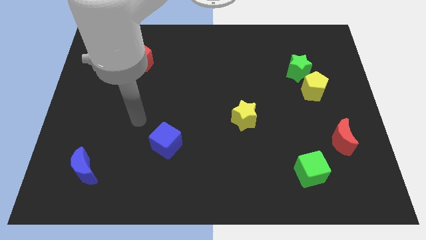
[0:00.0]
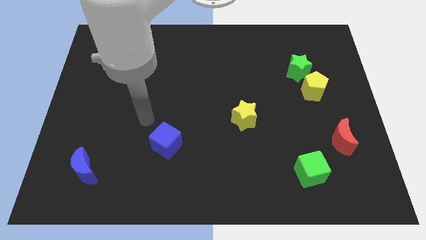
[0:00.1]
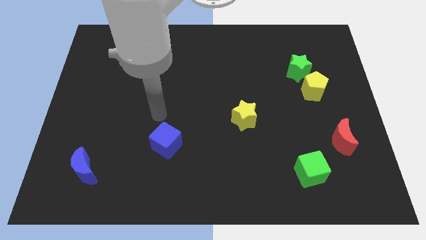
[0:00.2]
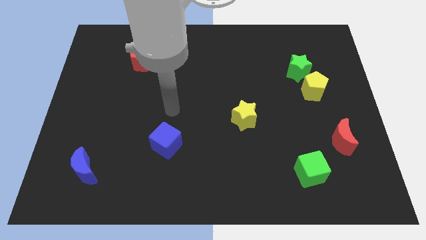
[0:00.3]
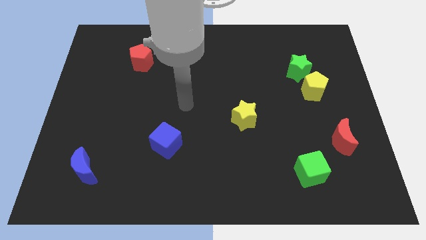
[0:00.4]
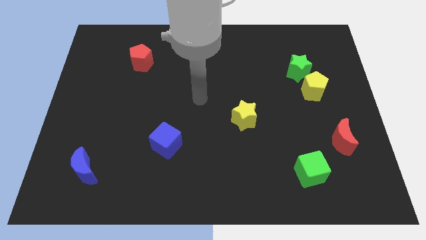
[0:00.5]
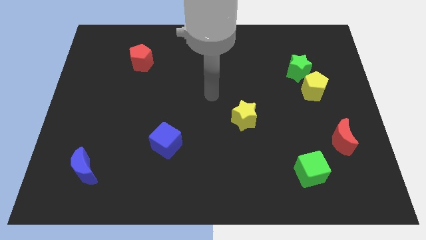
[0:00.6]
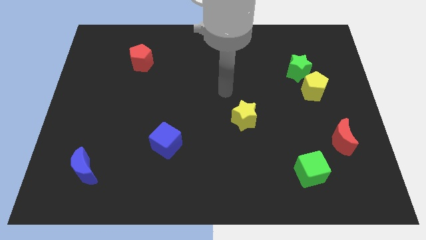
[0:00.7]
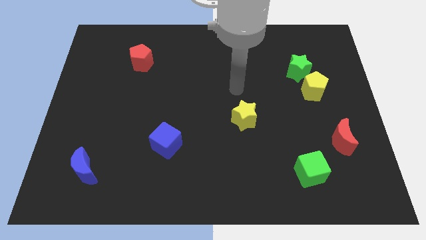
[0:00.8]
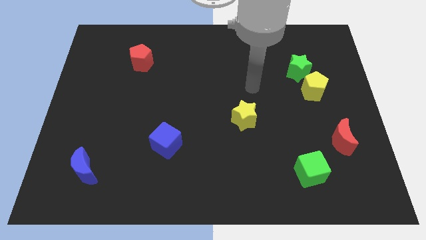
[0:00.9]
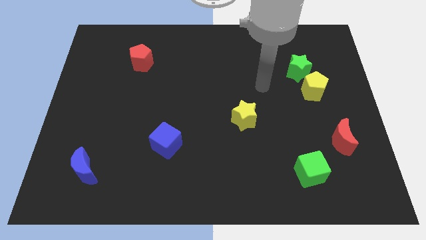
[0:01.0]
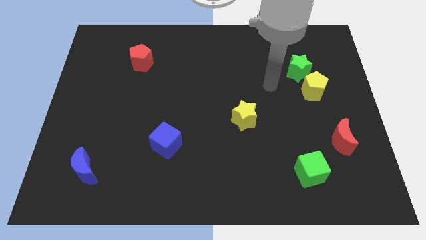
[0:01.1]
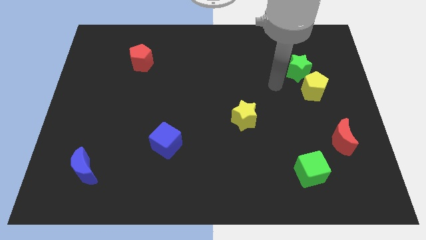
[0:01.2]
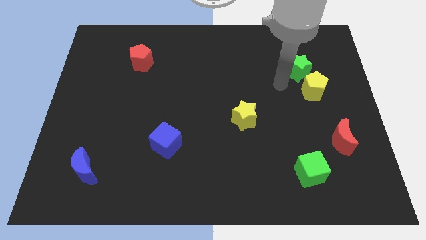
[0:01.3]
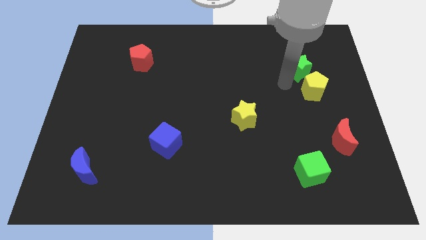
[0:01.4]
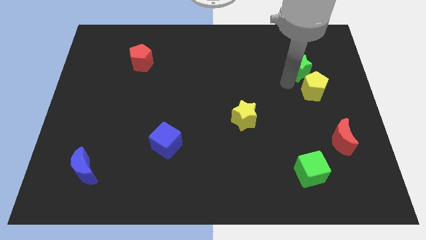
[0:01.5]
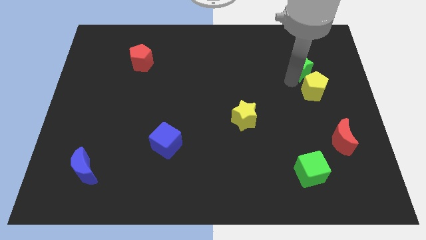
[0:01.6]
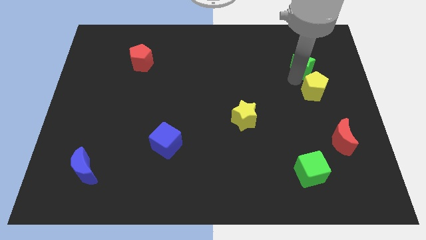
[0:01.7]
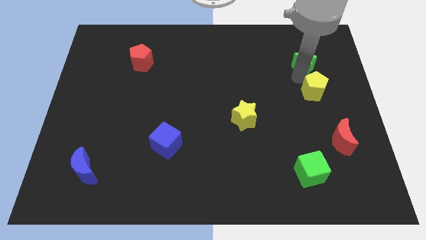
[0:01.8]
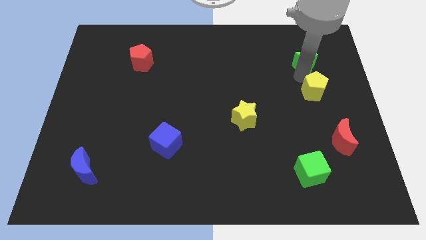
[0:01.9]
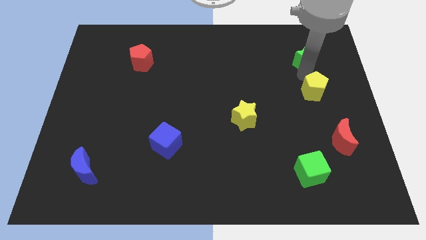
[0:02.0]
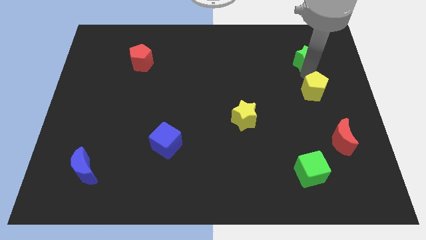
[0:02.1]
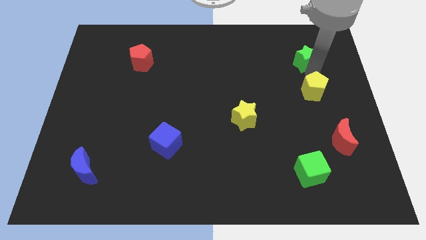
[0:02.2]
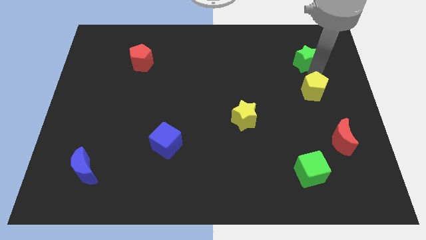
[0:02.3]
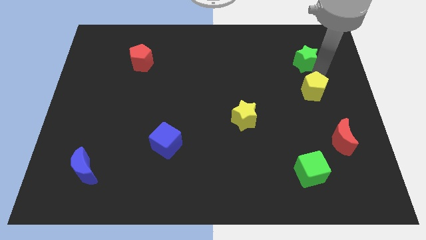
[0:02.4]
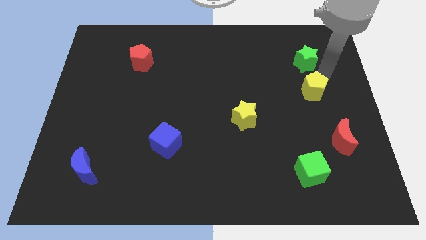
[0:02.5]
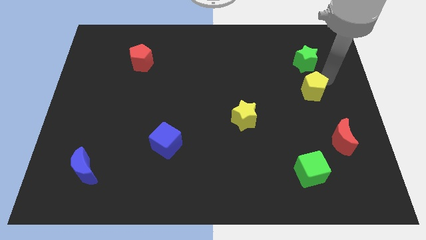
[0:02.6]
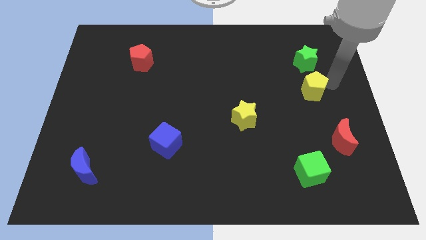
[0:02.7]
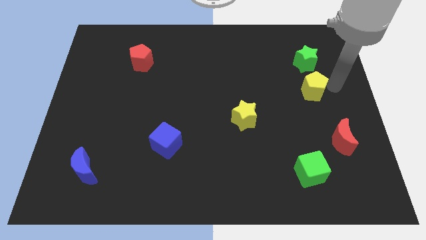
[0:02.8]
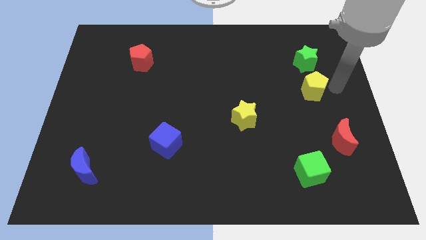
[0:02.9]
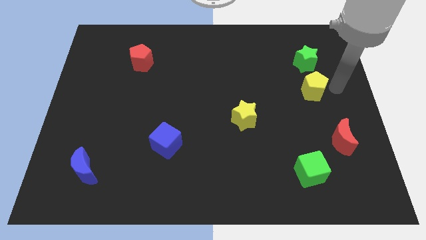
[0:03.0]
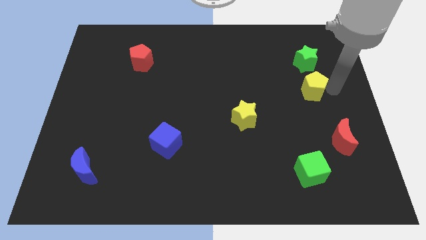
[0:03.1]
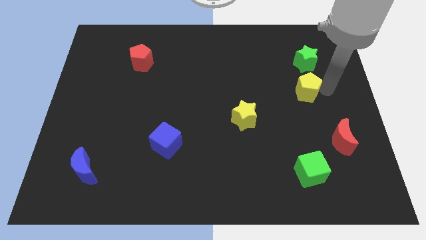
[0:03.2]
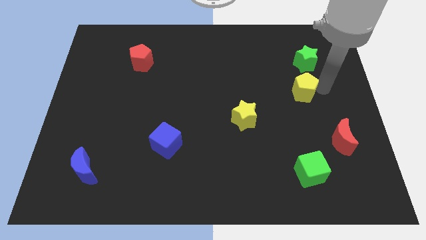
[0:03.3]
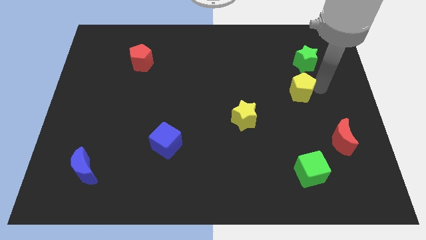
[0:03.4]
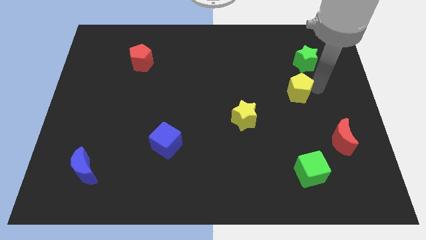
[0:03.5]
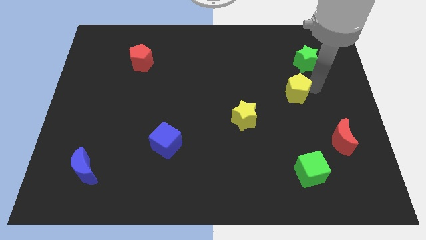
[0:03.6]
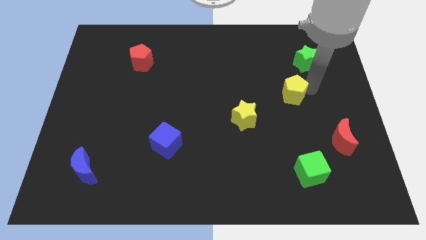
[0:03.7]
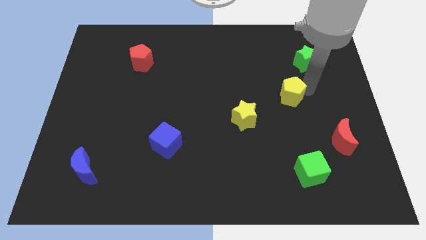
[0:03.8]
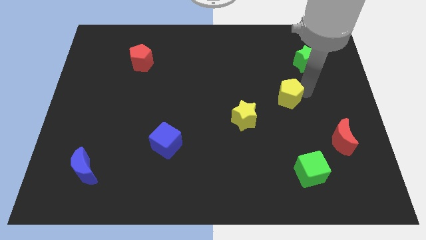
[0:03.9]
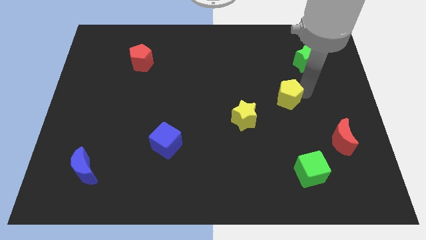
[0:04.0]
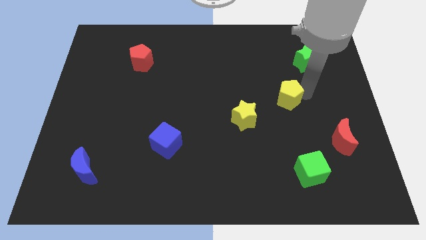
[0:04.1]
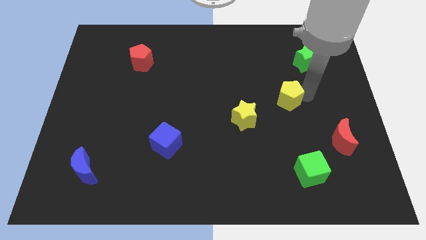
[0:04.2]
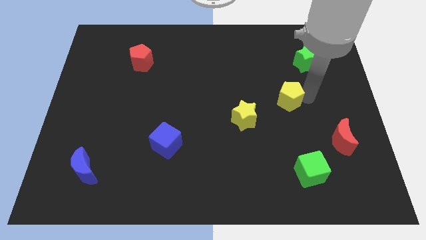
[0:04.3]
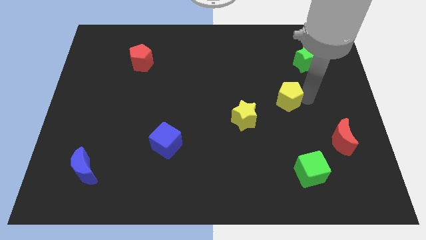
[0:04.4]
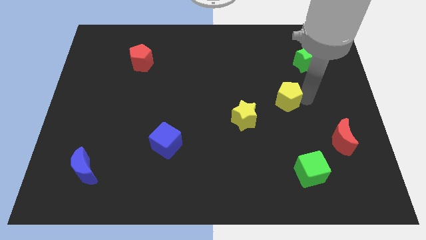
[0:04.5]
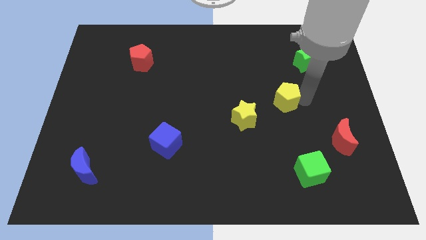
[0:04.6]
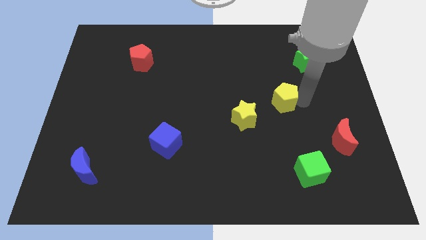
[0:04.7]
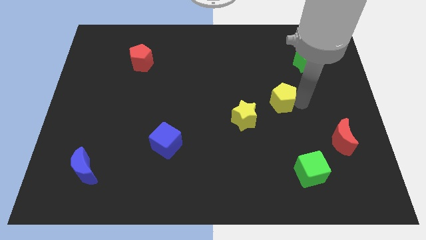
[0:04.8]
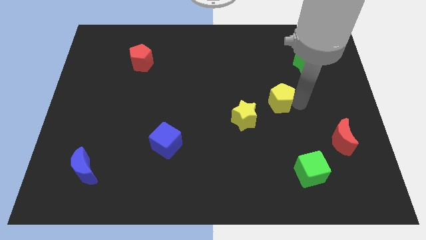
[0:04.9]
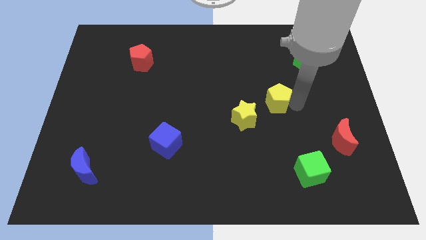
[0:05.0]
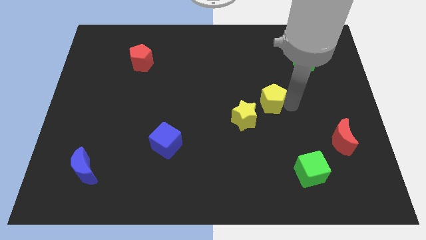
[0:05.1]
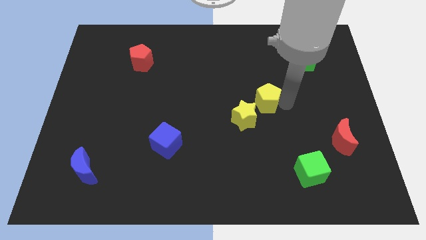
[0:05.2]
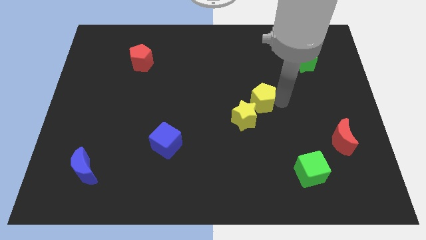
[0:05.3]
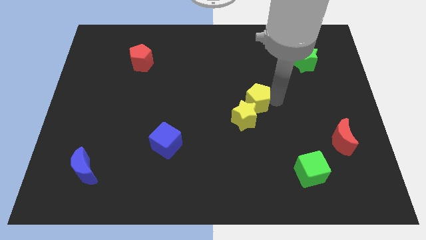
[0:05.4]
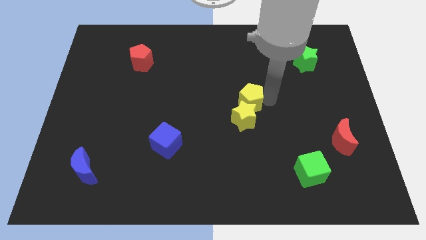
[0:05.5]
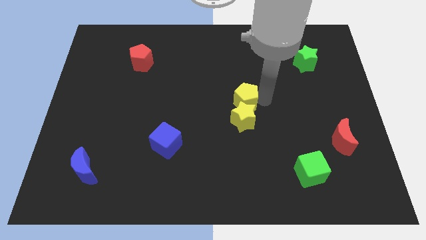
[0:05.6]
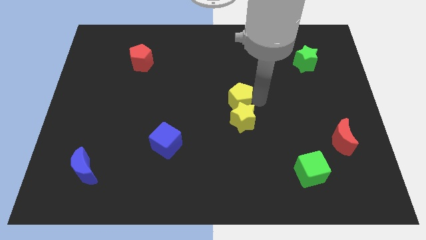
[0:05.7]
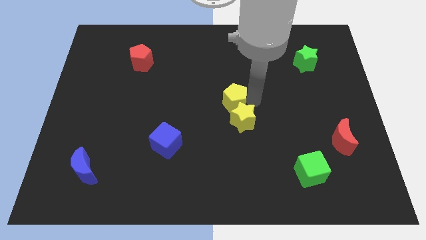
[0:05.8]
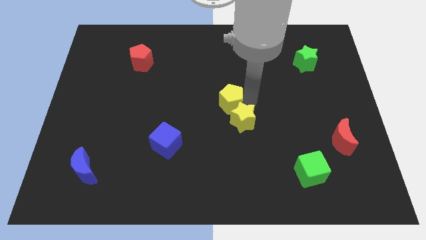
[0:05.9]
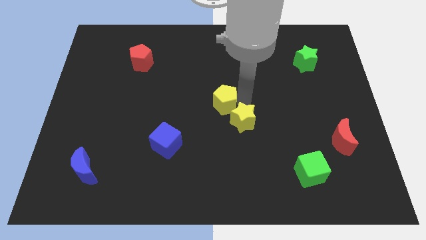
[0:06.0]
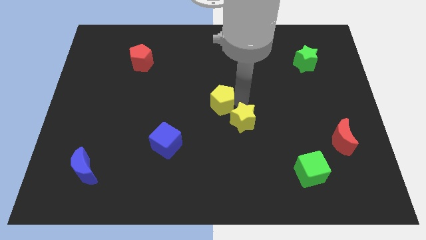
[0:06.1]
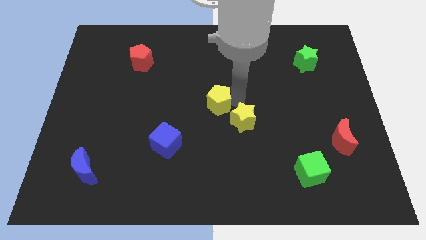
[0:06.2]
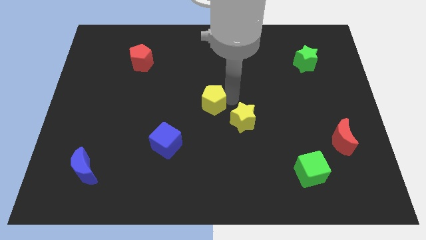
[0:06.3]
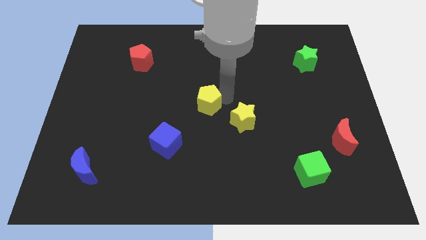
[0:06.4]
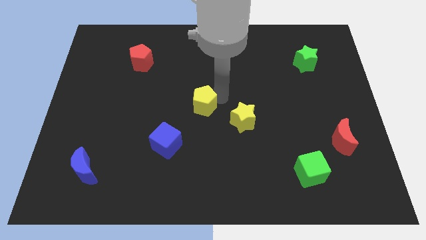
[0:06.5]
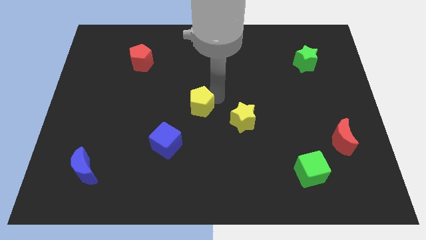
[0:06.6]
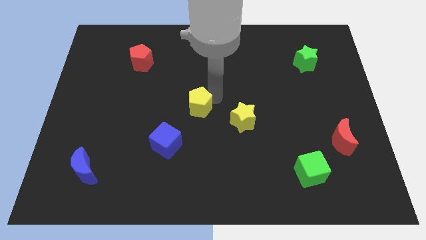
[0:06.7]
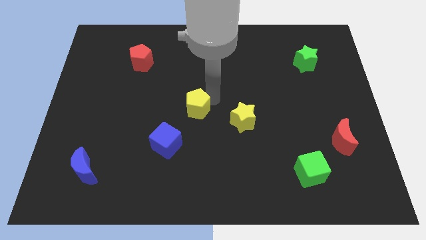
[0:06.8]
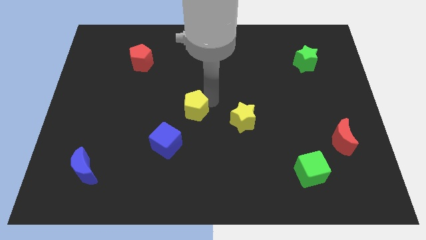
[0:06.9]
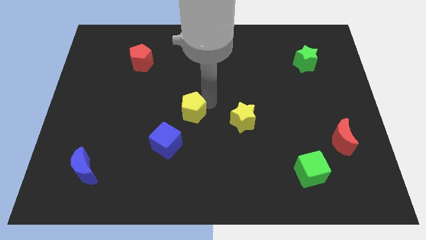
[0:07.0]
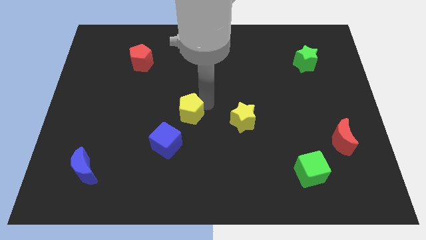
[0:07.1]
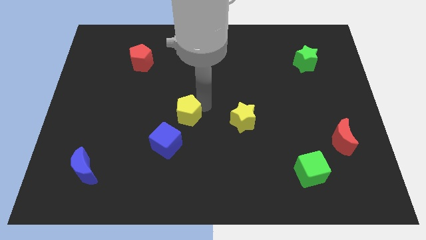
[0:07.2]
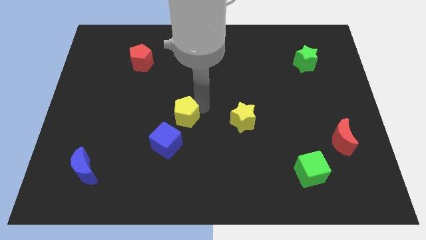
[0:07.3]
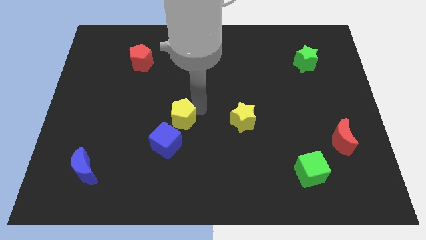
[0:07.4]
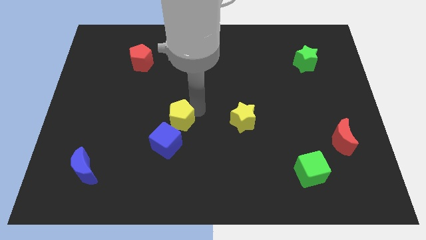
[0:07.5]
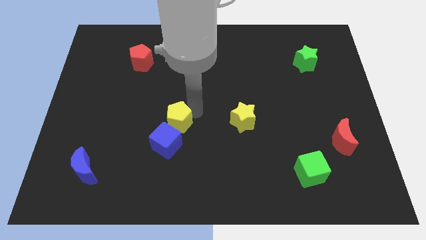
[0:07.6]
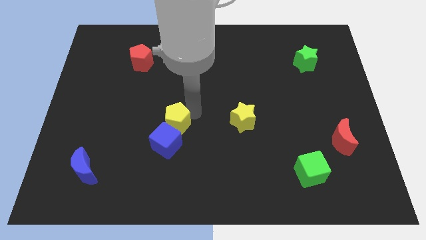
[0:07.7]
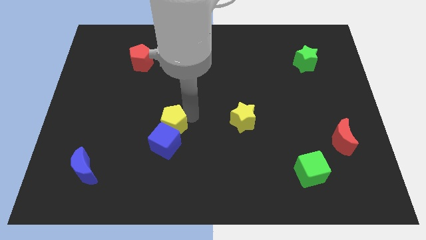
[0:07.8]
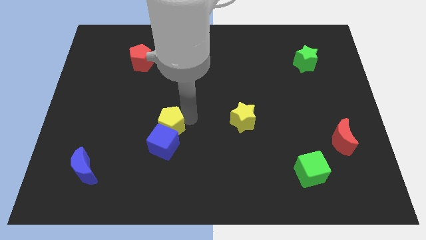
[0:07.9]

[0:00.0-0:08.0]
slide the yellow pentagon next to the blue cube
